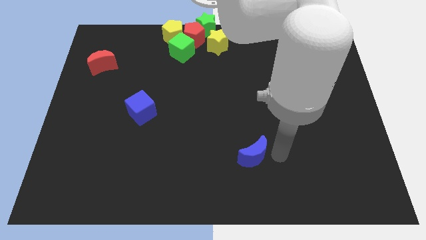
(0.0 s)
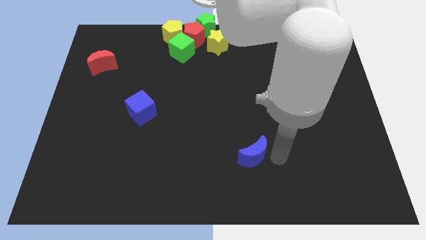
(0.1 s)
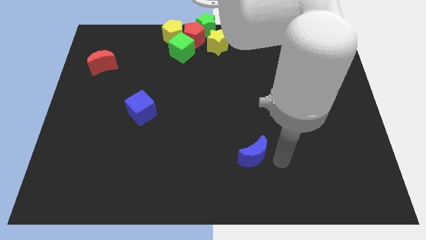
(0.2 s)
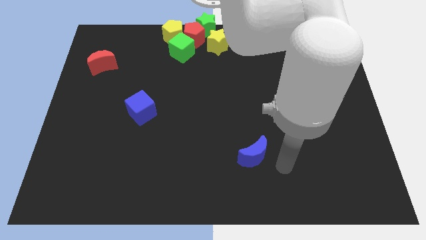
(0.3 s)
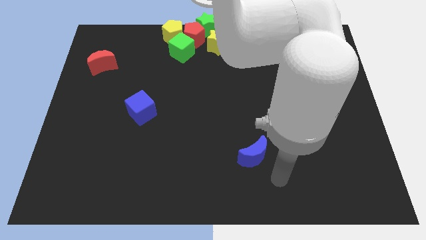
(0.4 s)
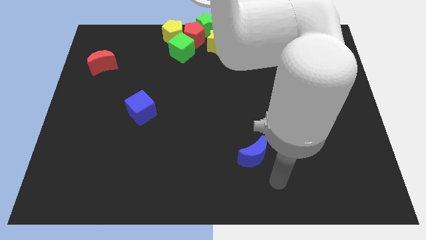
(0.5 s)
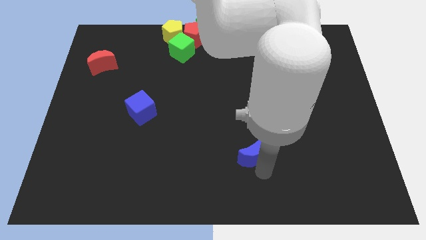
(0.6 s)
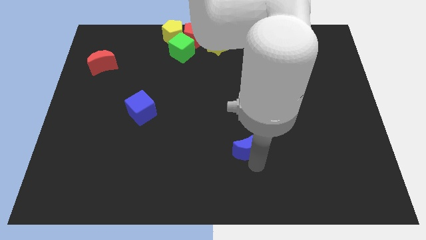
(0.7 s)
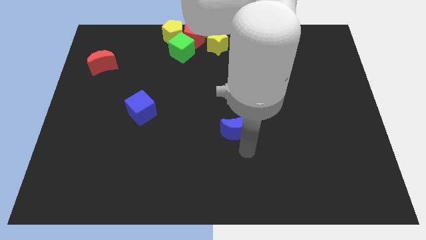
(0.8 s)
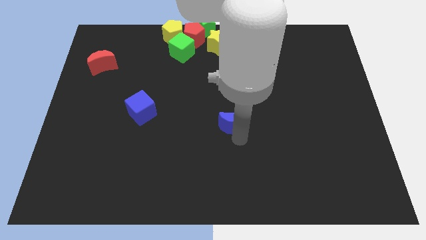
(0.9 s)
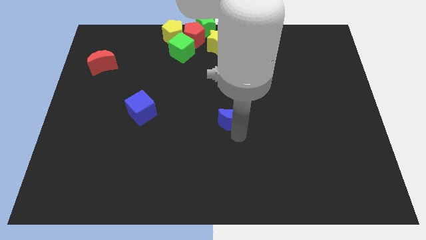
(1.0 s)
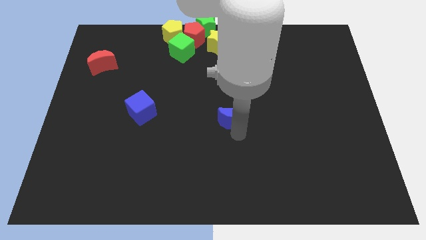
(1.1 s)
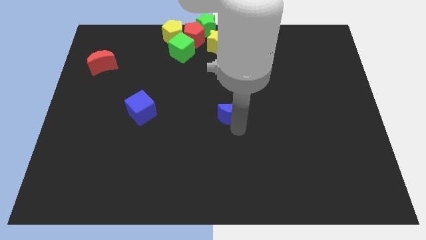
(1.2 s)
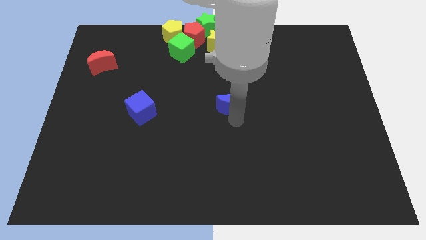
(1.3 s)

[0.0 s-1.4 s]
place the blue crescent at center of the board

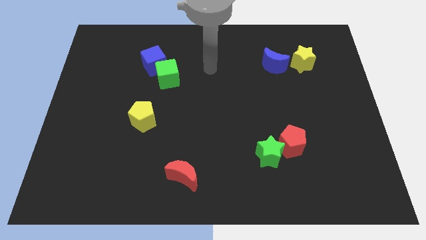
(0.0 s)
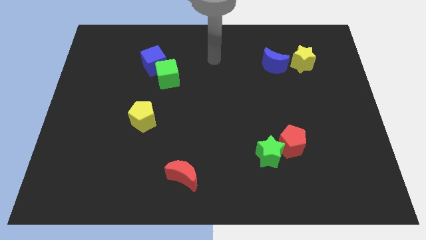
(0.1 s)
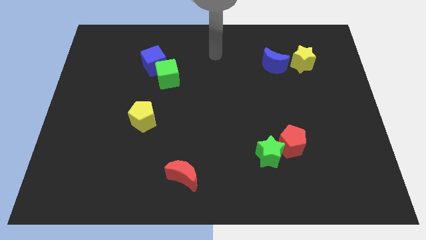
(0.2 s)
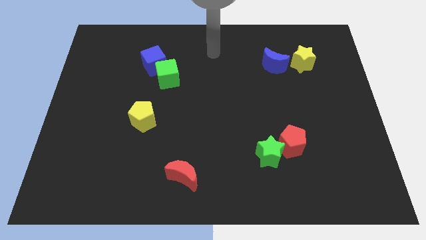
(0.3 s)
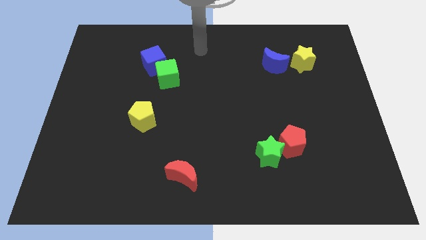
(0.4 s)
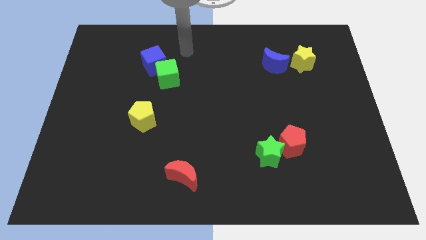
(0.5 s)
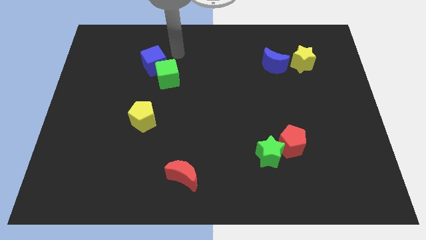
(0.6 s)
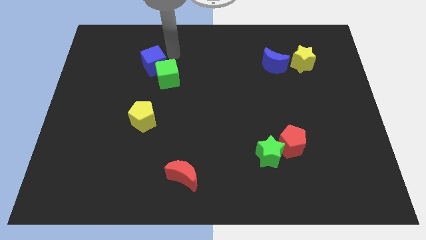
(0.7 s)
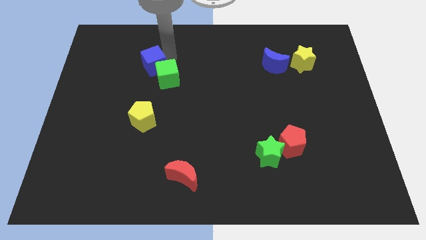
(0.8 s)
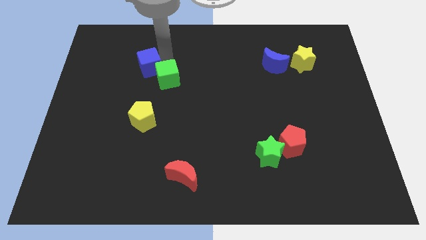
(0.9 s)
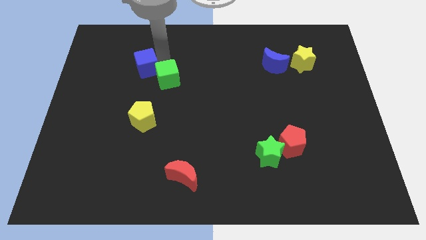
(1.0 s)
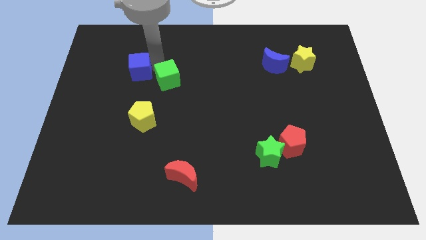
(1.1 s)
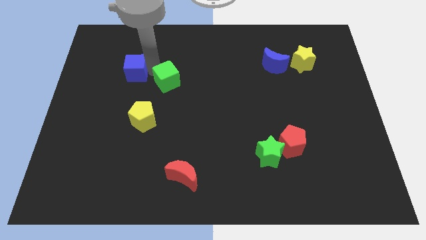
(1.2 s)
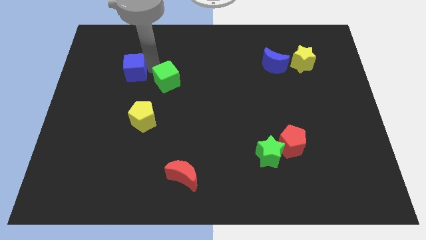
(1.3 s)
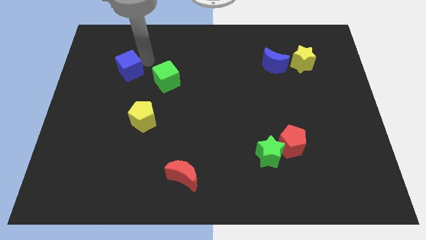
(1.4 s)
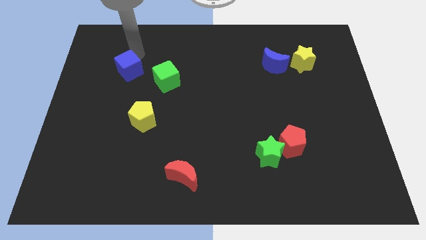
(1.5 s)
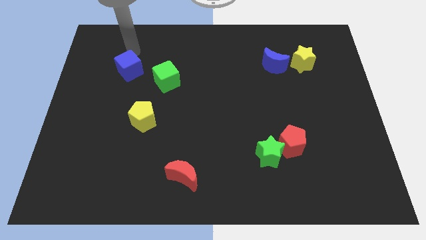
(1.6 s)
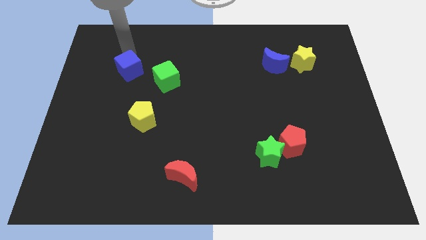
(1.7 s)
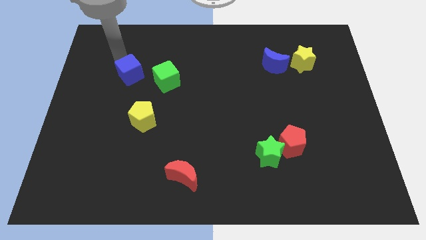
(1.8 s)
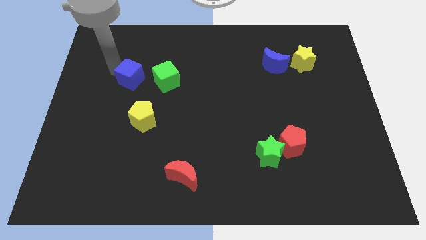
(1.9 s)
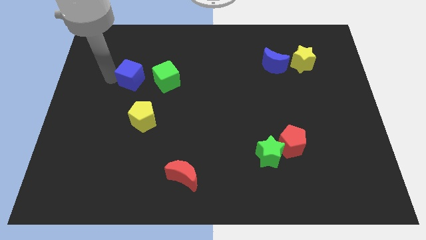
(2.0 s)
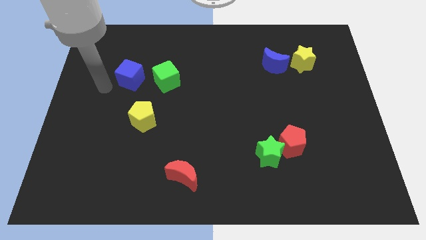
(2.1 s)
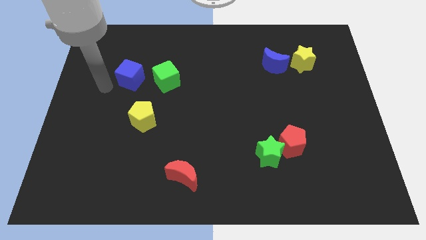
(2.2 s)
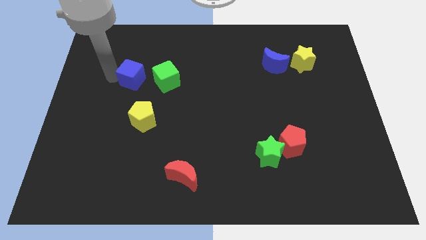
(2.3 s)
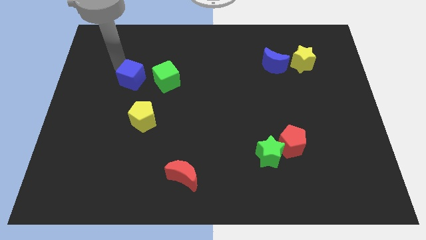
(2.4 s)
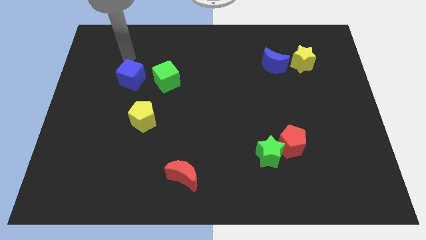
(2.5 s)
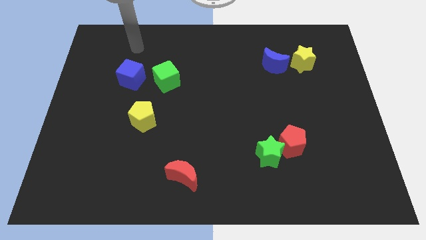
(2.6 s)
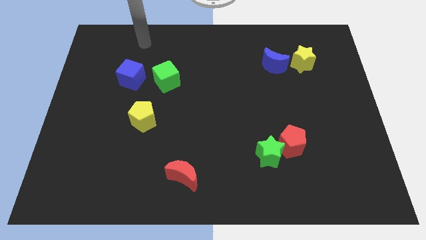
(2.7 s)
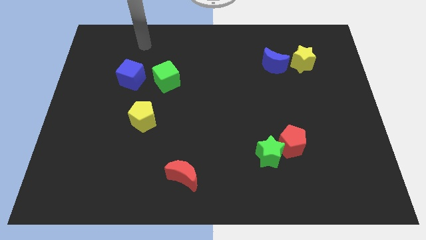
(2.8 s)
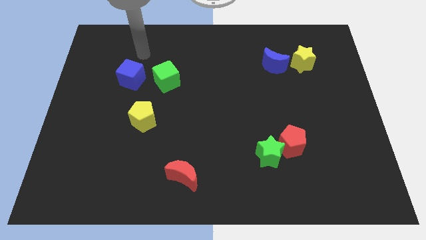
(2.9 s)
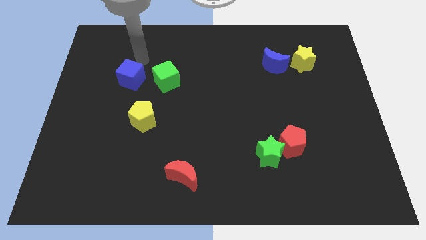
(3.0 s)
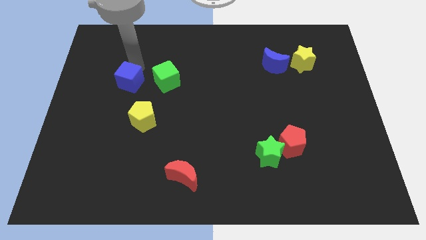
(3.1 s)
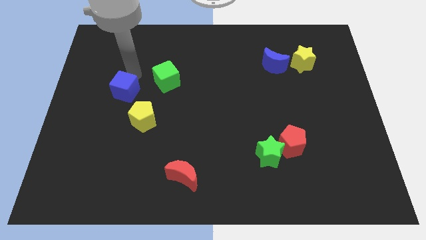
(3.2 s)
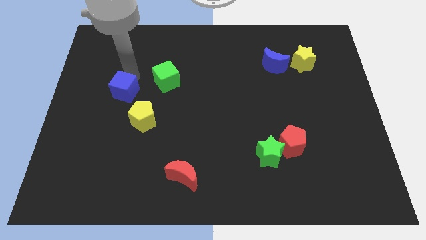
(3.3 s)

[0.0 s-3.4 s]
move blue cube slightly down

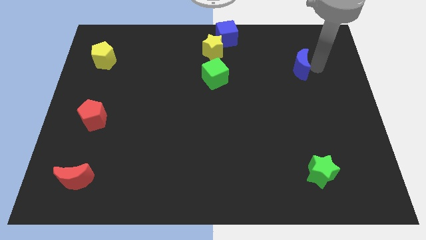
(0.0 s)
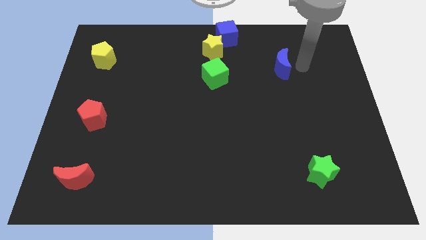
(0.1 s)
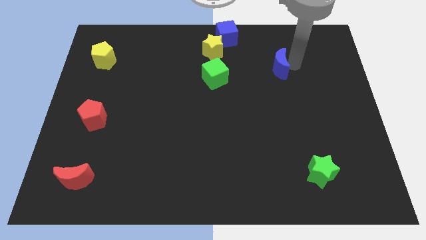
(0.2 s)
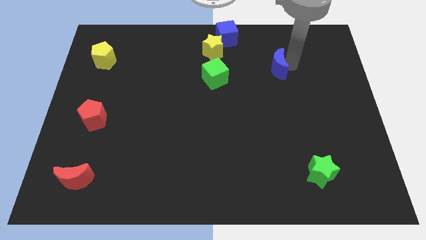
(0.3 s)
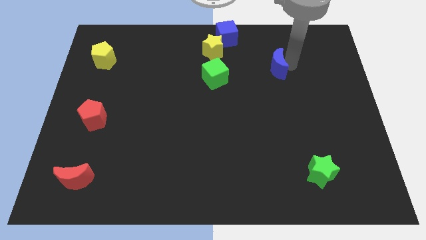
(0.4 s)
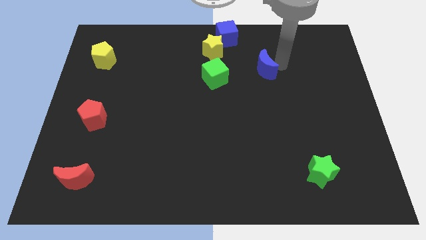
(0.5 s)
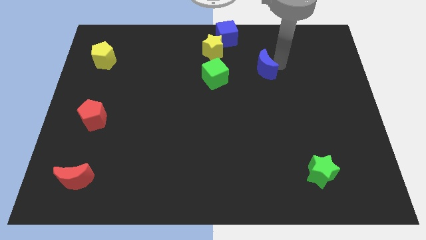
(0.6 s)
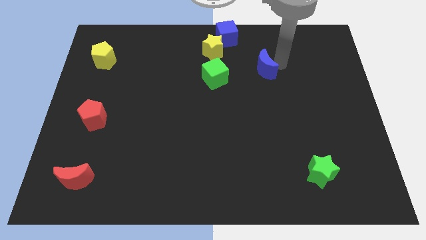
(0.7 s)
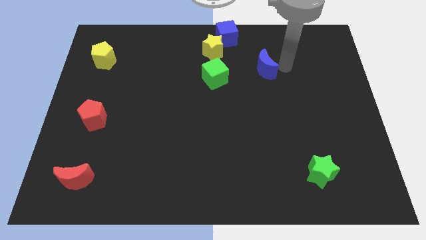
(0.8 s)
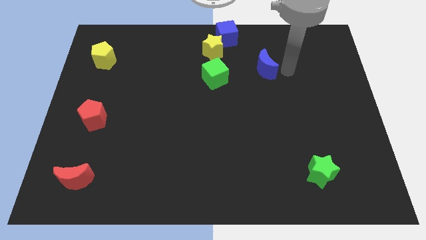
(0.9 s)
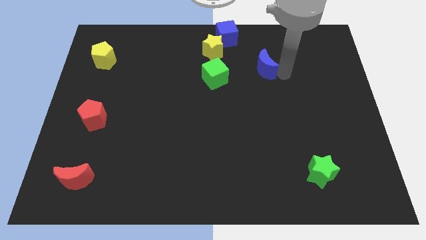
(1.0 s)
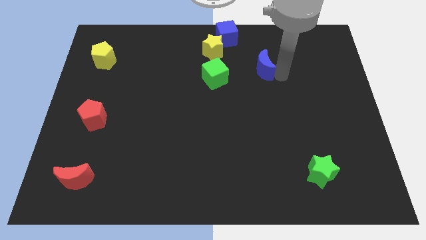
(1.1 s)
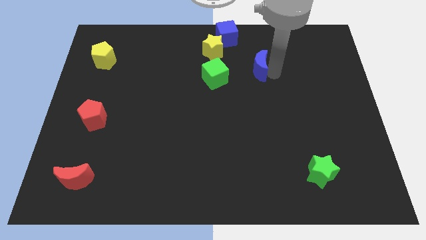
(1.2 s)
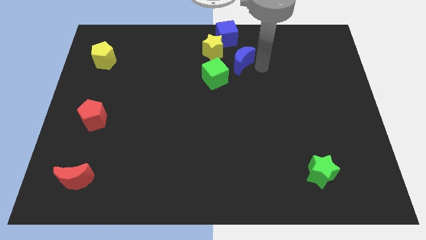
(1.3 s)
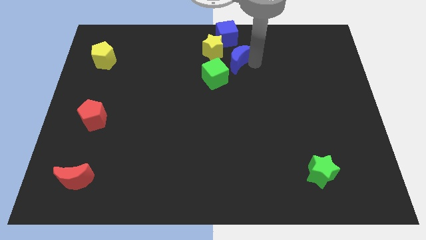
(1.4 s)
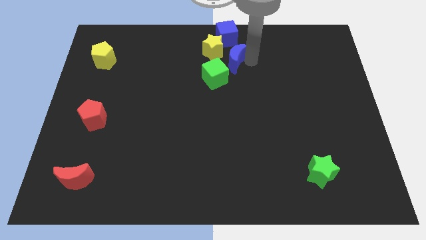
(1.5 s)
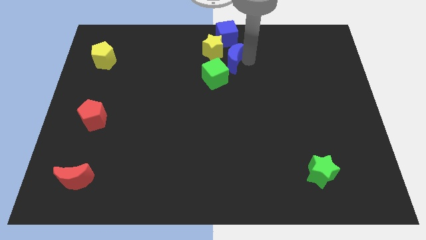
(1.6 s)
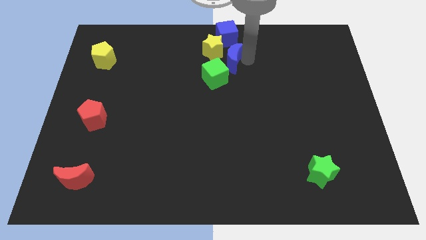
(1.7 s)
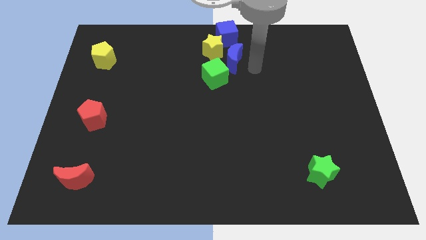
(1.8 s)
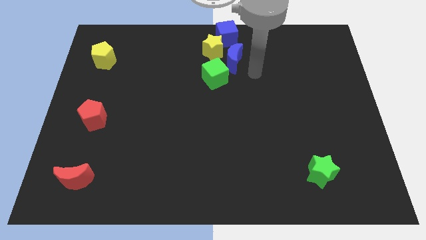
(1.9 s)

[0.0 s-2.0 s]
place the blue moon towards the right side of the yellow star

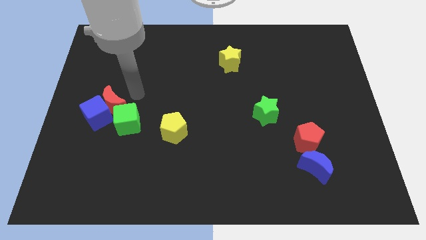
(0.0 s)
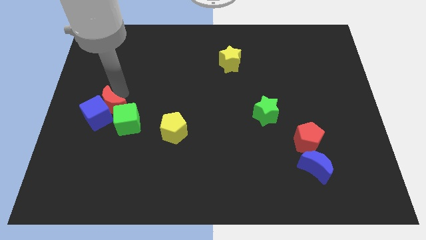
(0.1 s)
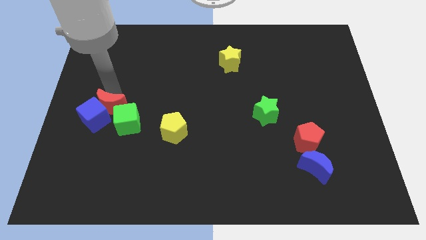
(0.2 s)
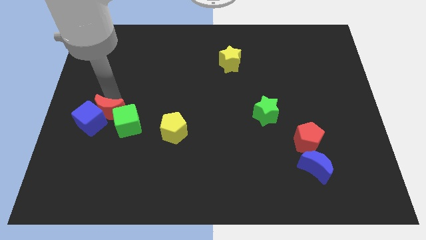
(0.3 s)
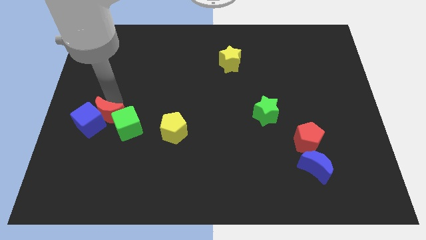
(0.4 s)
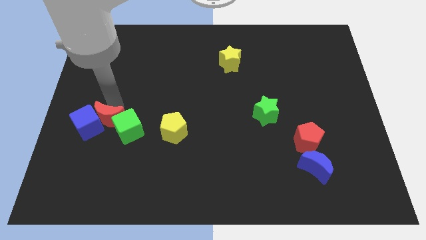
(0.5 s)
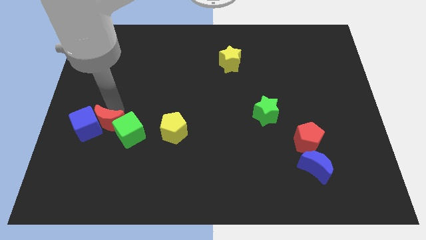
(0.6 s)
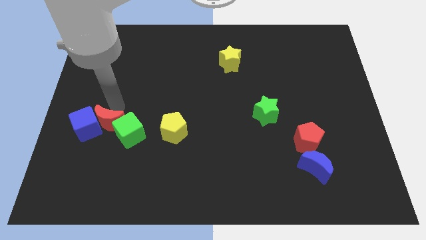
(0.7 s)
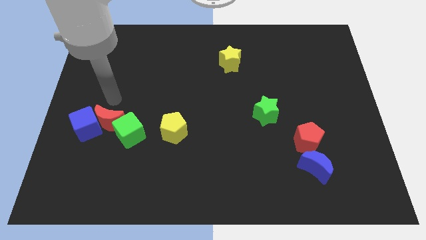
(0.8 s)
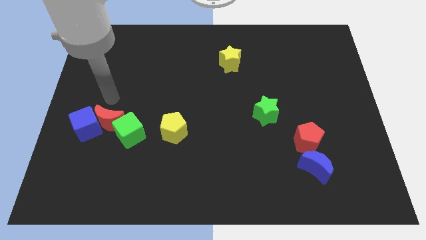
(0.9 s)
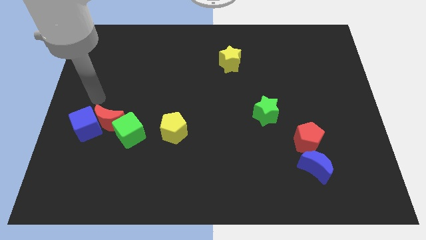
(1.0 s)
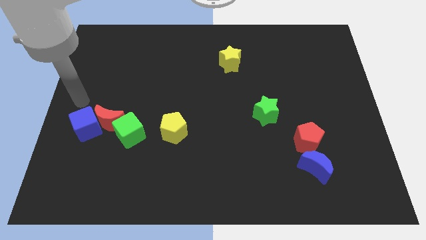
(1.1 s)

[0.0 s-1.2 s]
push the red crescent slightly towards bottom of the board

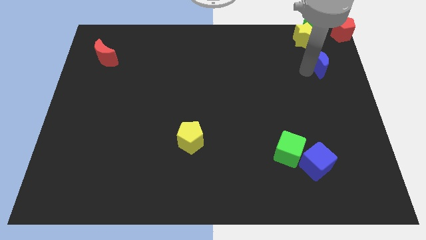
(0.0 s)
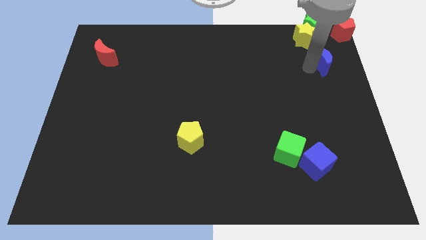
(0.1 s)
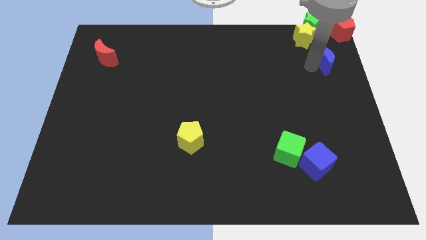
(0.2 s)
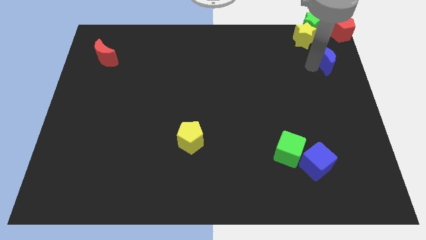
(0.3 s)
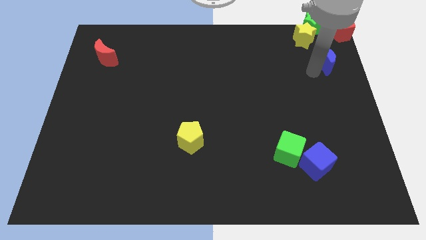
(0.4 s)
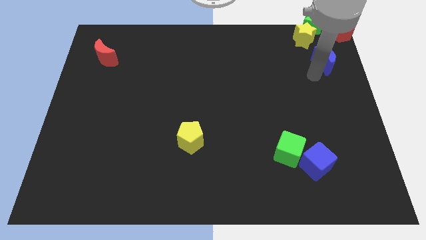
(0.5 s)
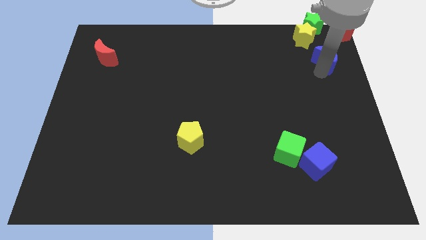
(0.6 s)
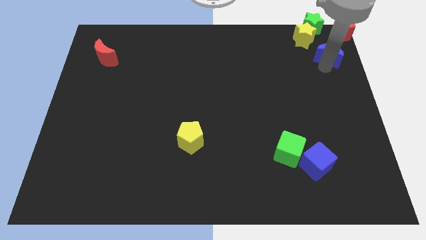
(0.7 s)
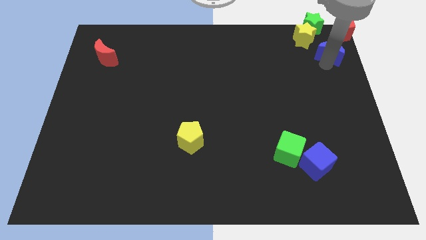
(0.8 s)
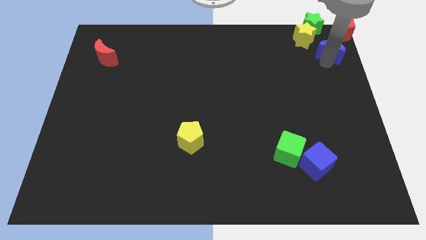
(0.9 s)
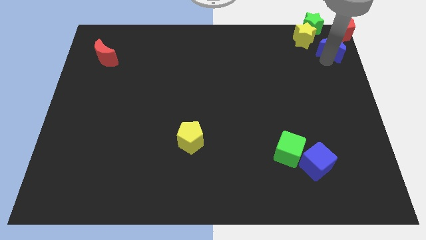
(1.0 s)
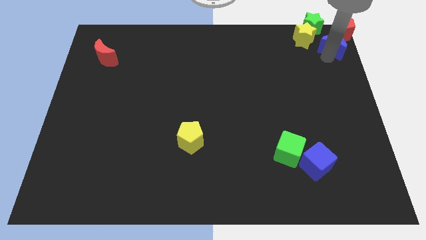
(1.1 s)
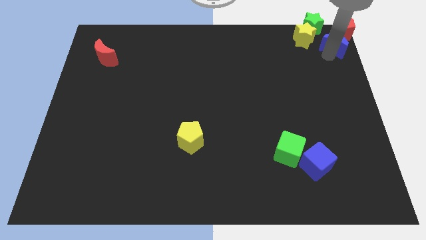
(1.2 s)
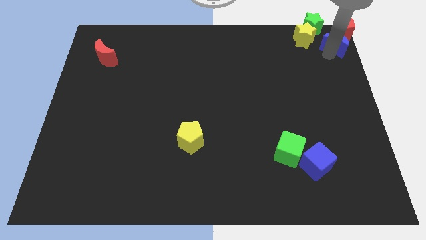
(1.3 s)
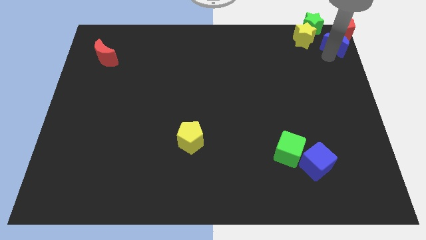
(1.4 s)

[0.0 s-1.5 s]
push the half blue moon to the top right corner of the board
